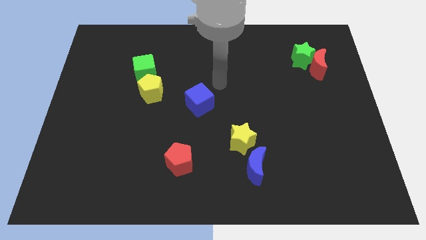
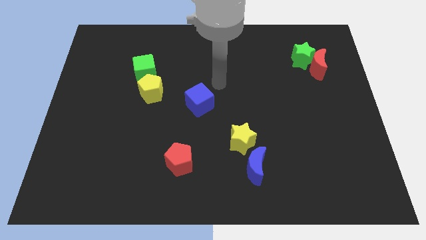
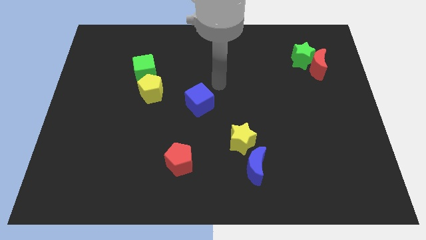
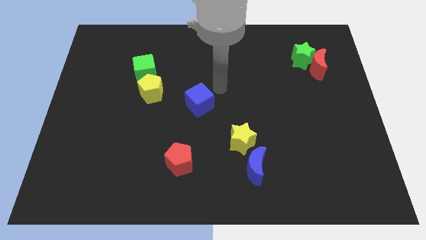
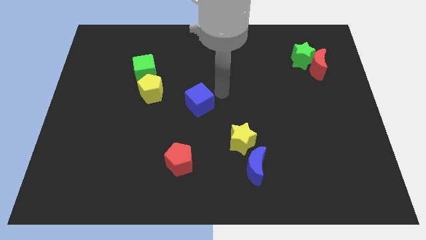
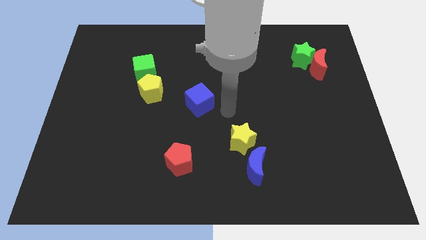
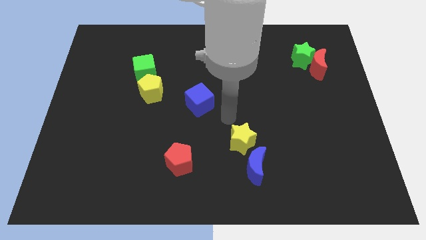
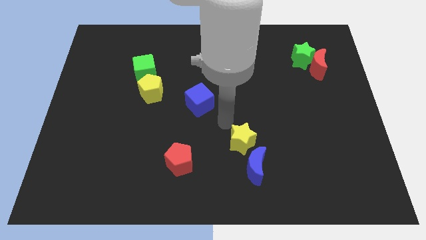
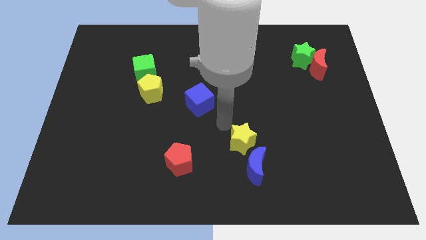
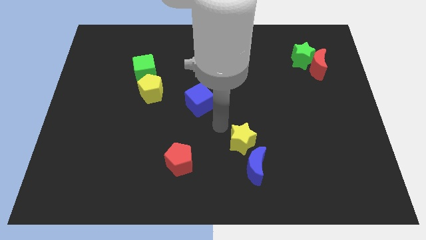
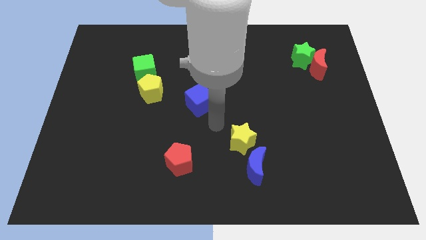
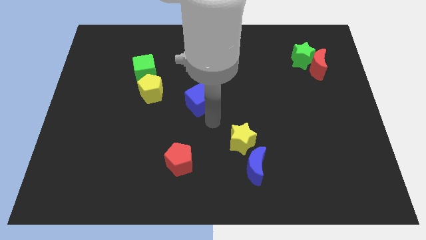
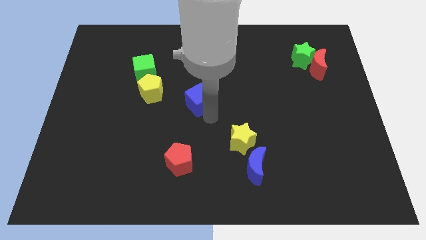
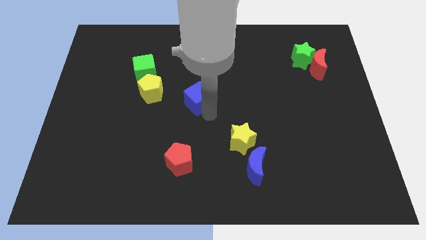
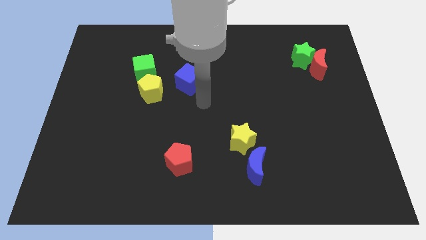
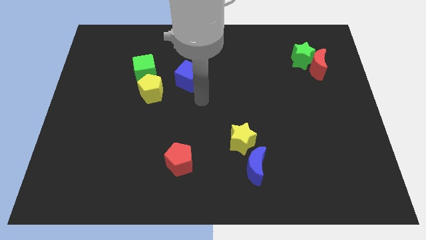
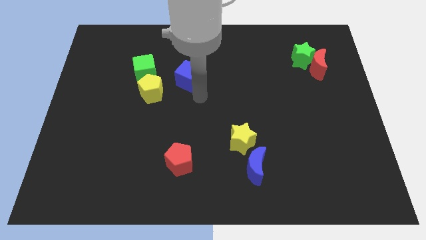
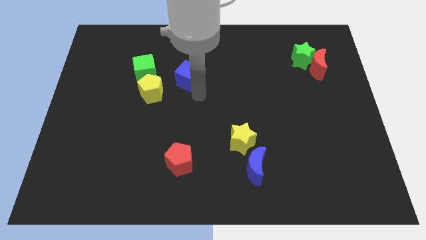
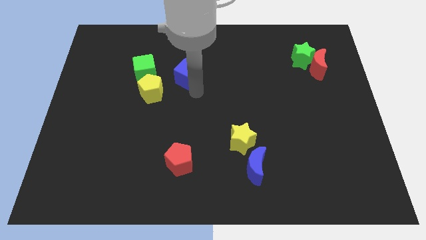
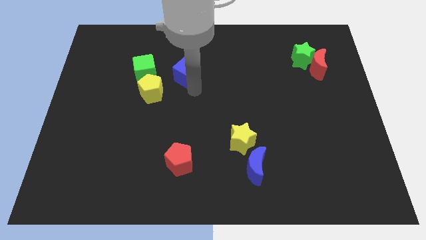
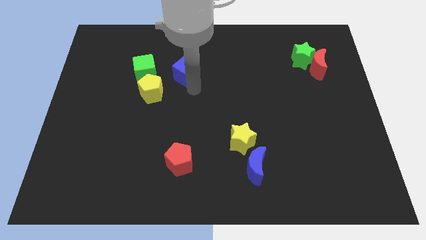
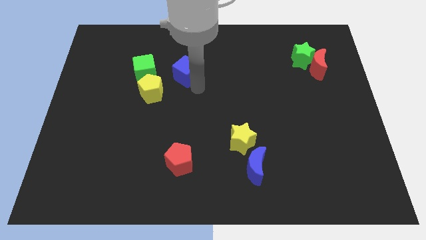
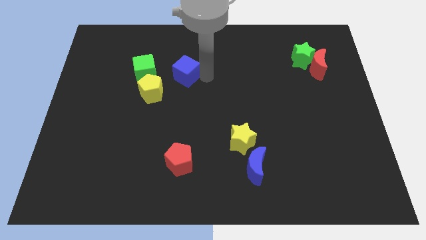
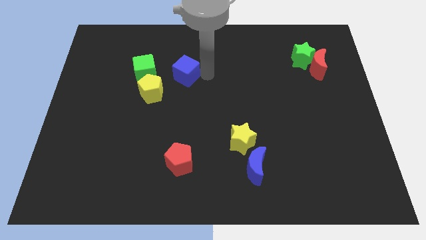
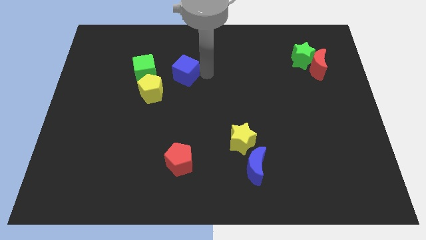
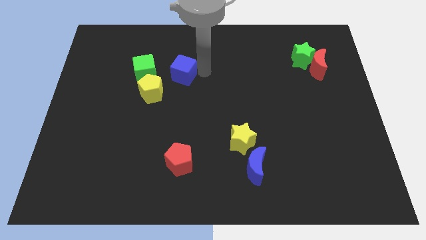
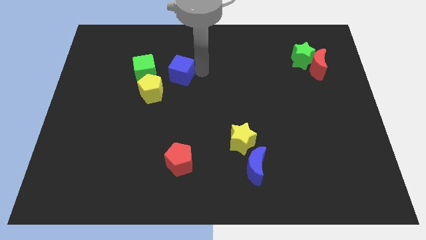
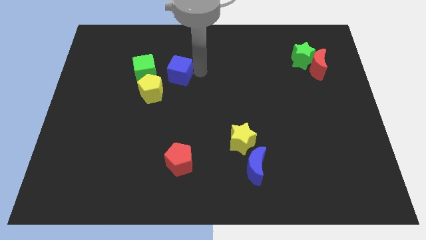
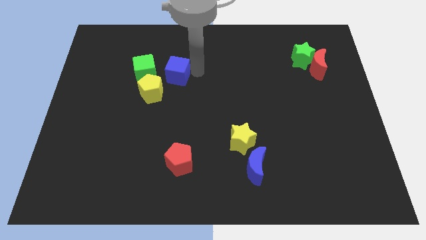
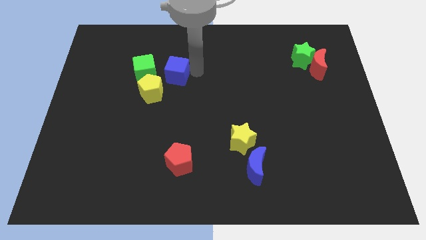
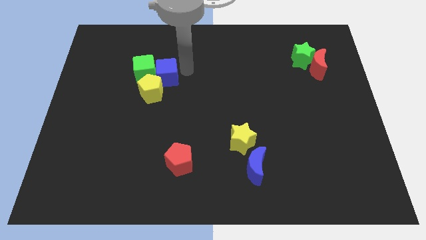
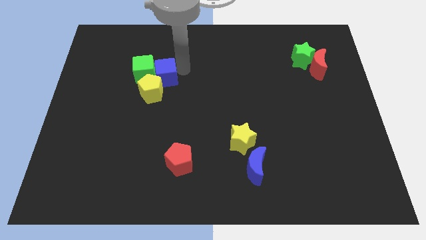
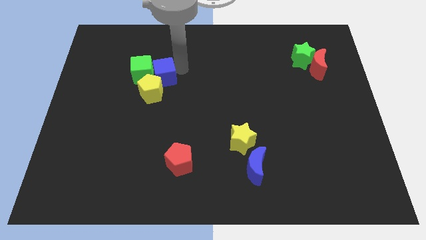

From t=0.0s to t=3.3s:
push the blue cube close to the green cube

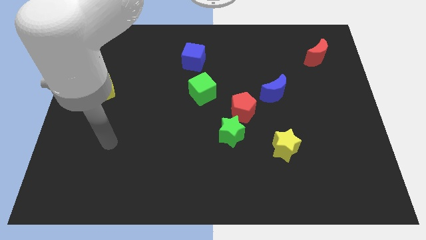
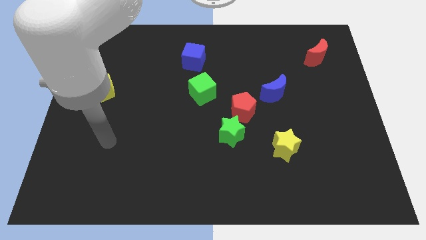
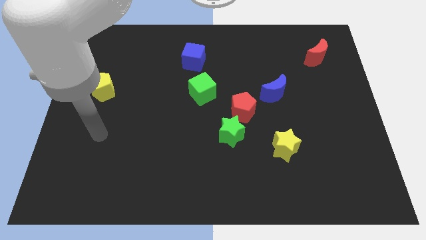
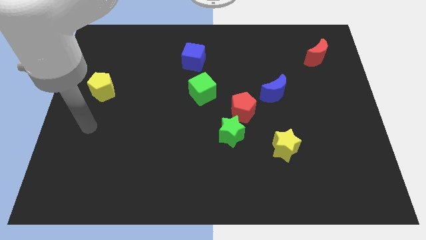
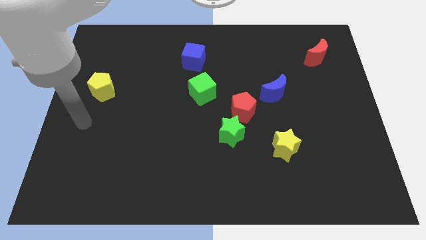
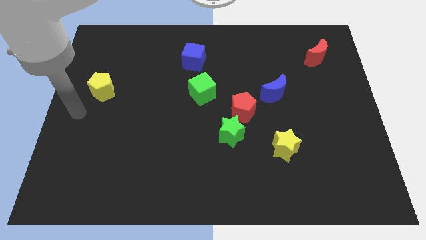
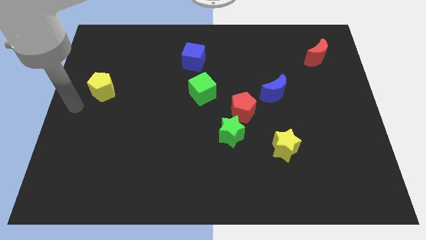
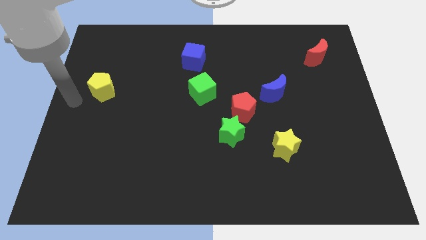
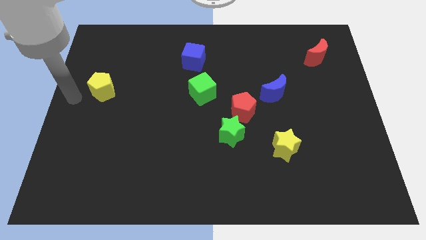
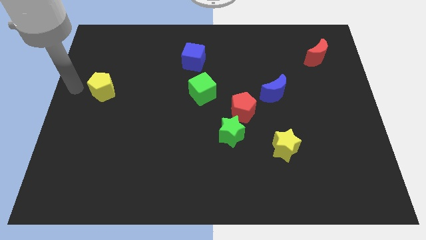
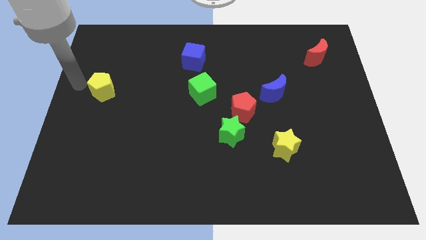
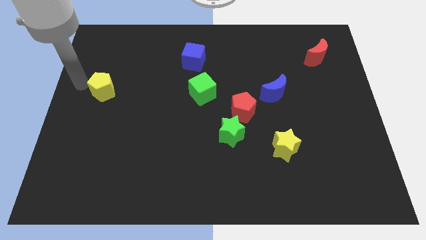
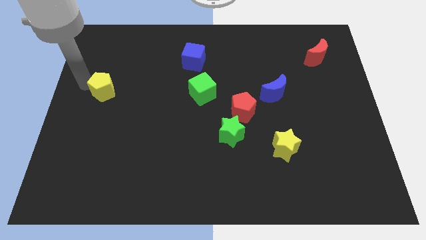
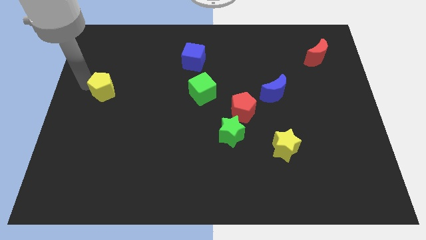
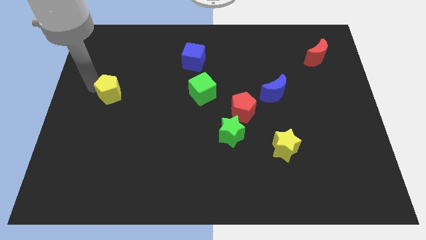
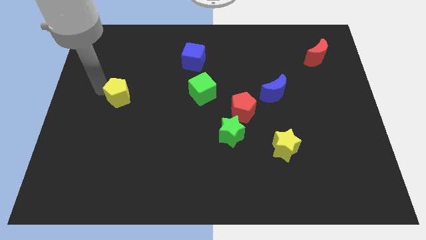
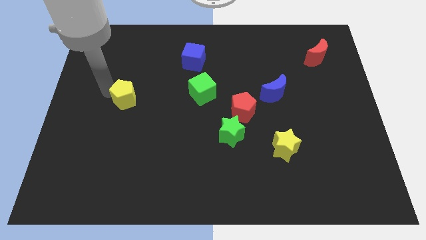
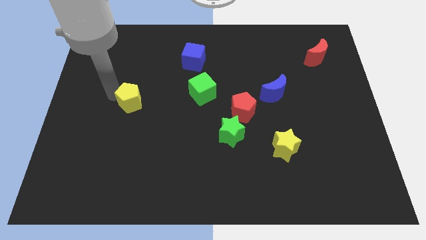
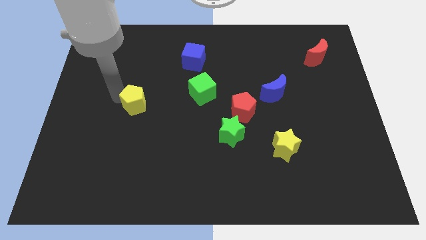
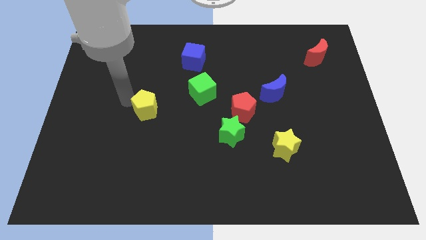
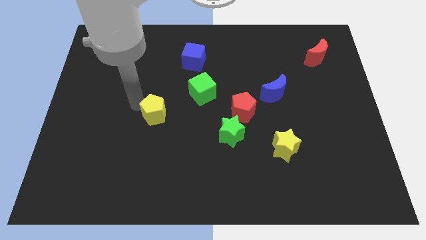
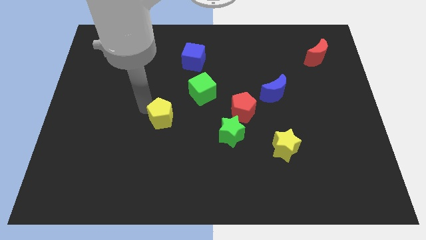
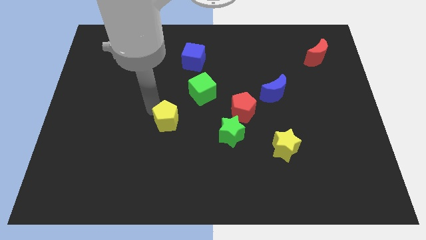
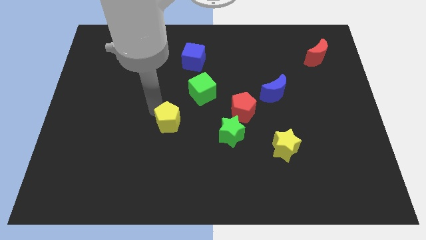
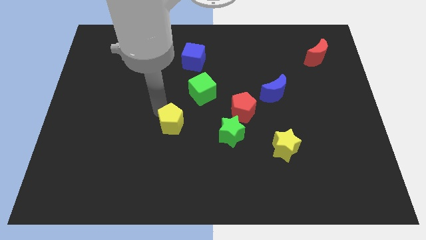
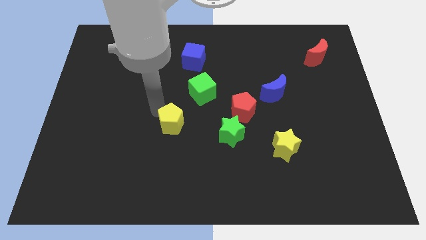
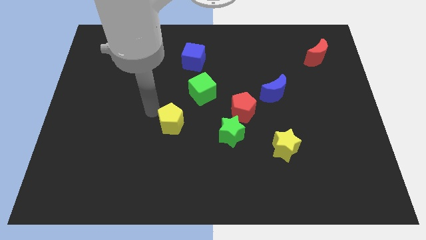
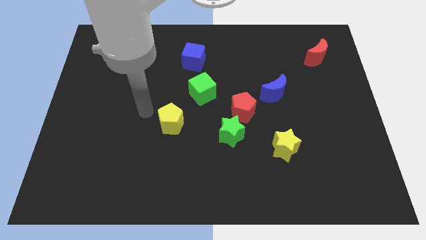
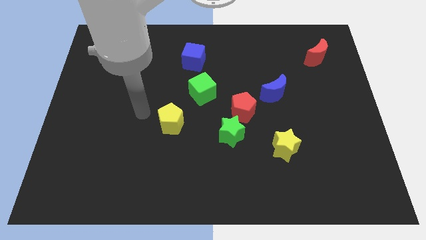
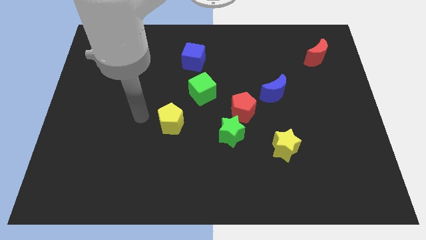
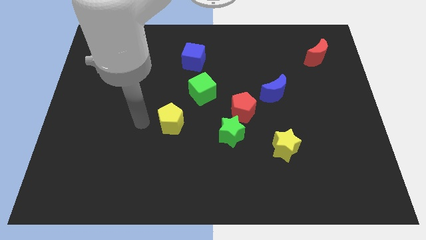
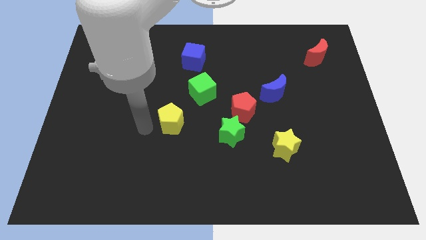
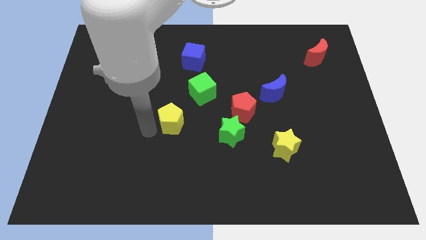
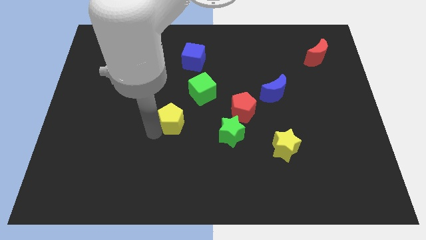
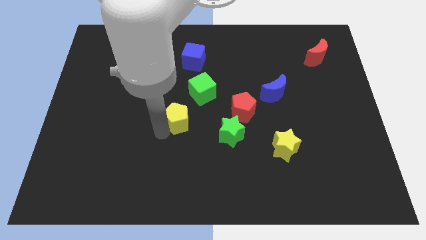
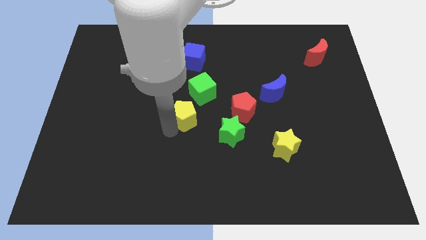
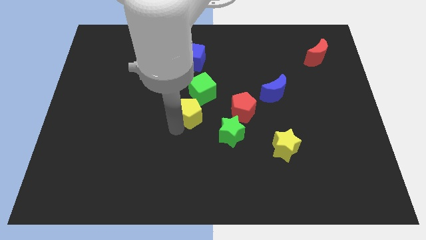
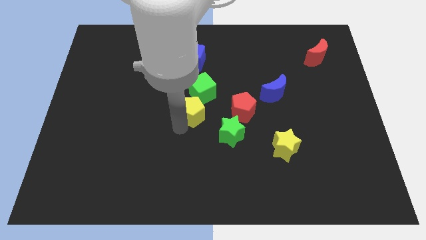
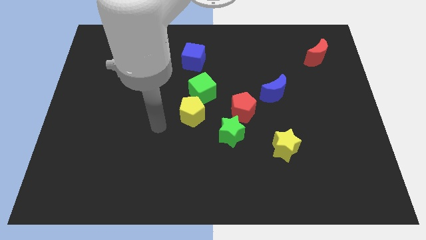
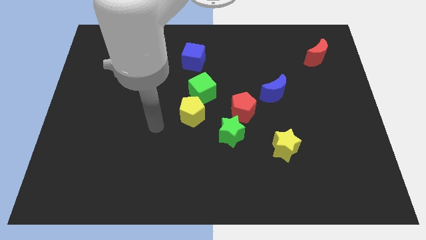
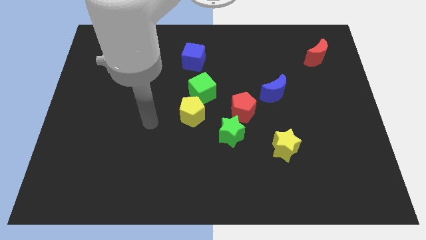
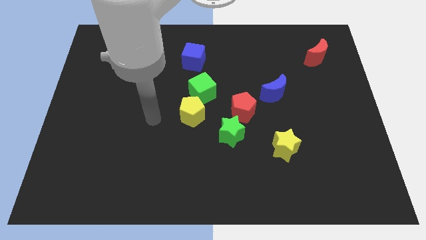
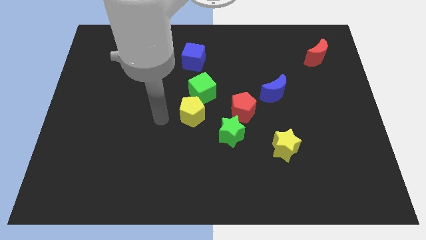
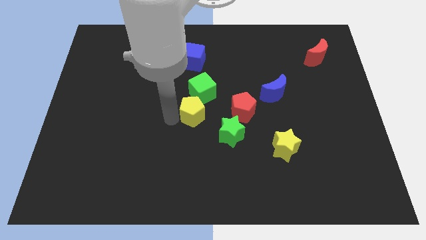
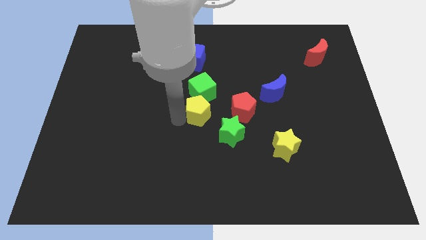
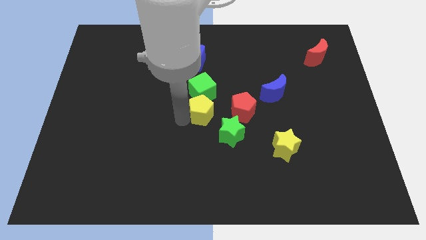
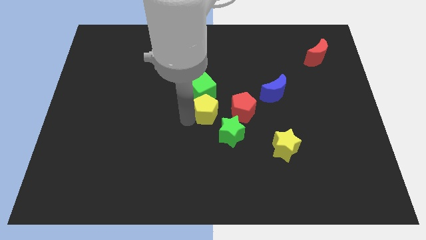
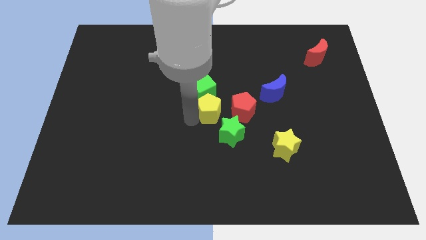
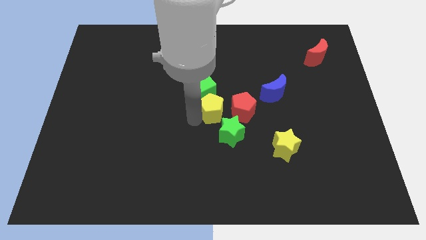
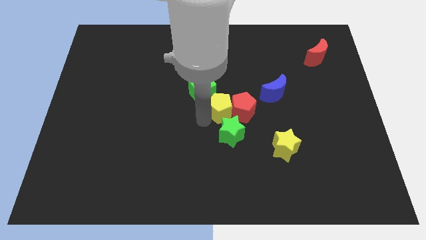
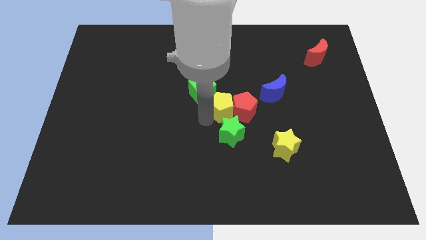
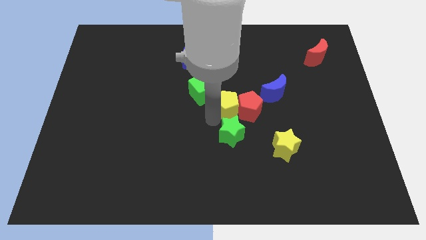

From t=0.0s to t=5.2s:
slide the yellow pentagon next to the red pentagon

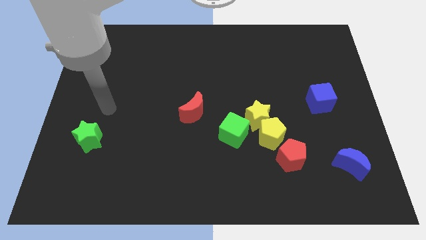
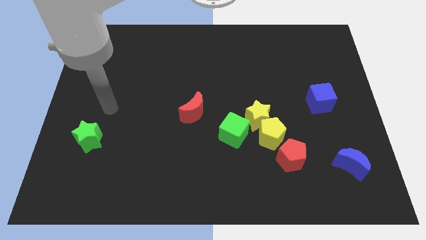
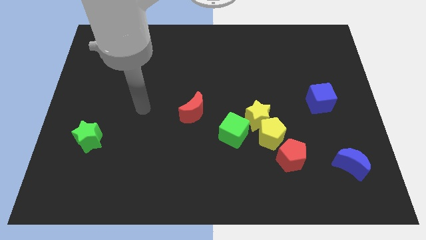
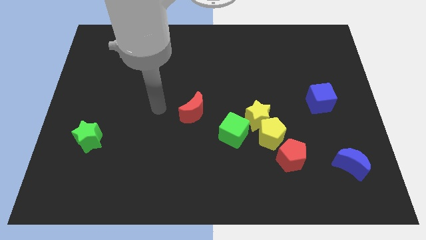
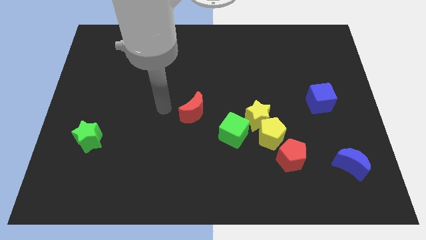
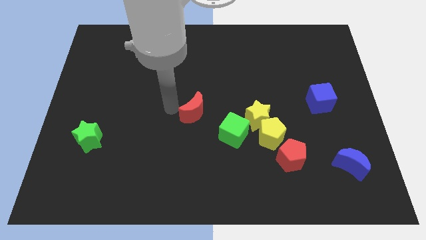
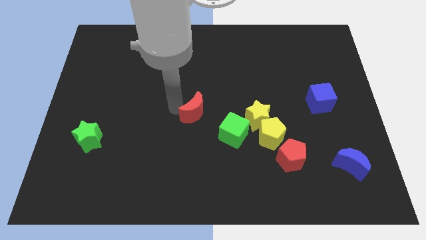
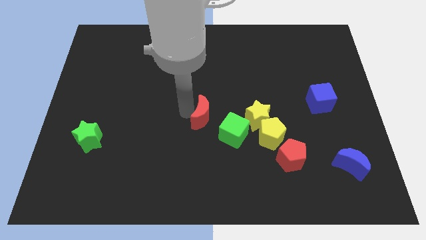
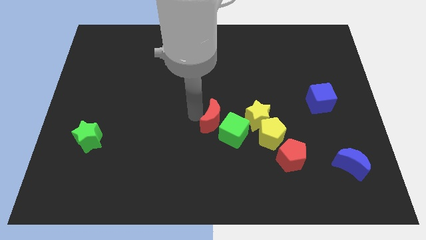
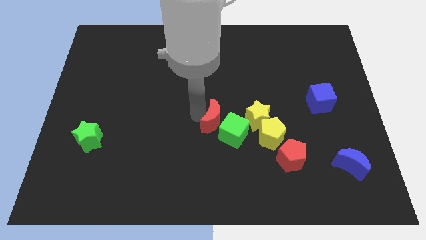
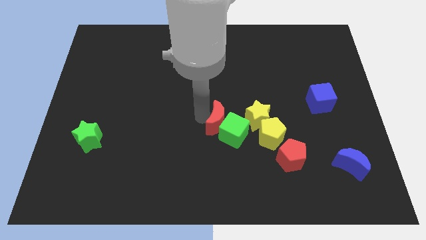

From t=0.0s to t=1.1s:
slide the red moon to the green cube
